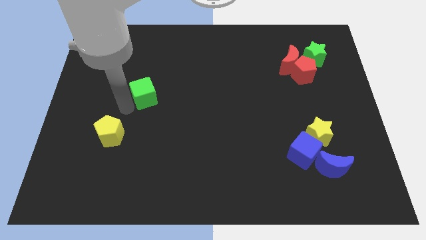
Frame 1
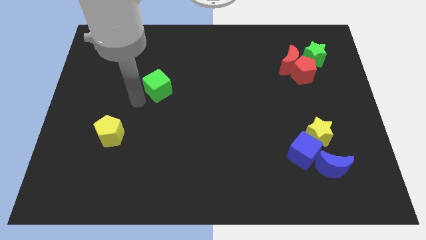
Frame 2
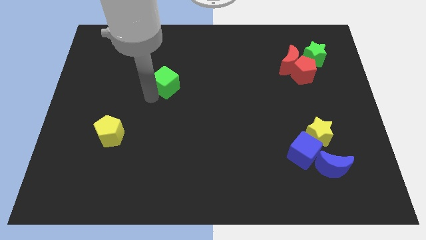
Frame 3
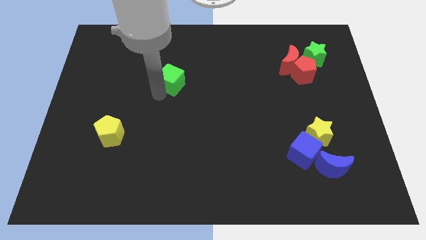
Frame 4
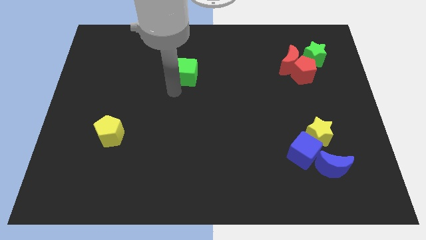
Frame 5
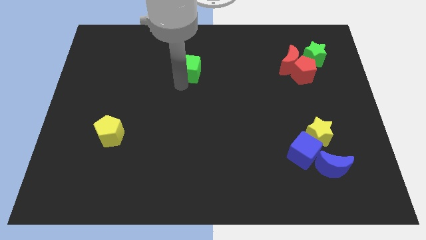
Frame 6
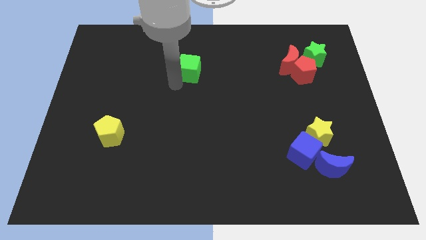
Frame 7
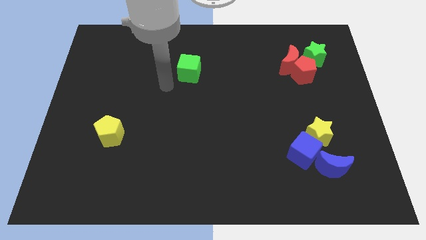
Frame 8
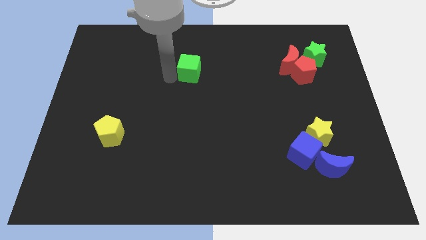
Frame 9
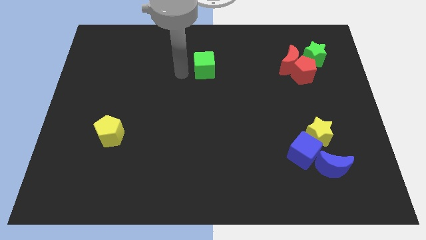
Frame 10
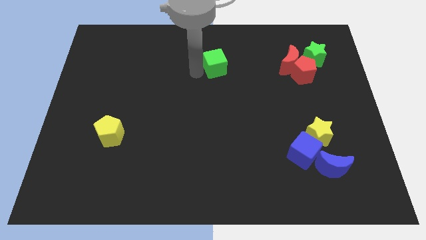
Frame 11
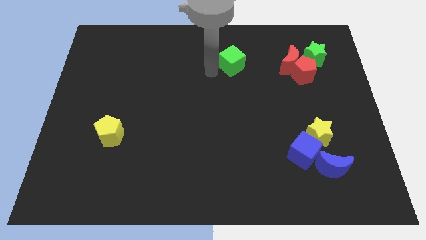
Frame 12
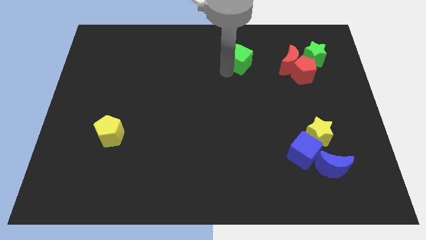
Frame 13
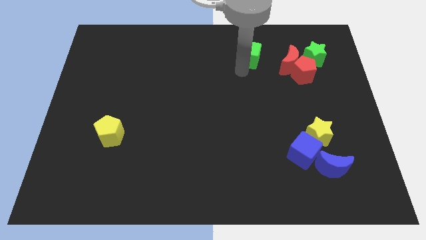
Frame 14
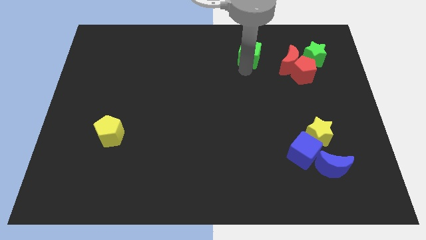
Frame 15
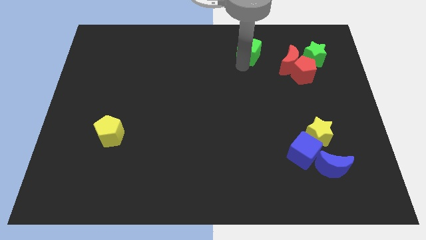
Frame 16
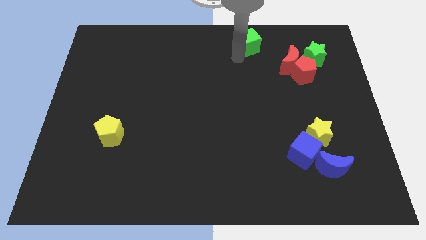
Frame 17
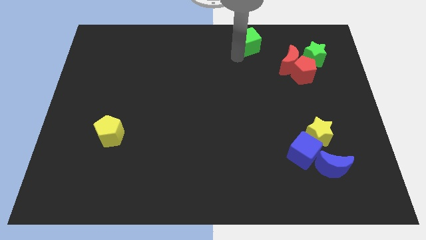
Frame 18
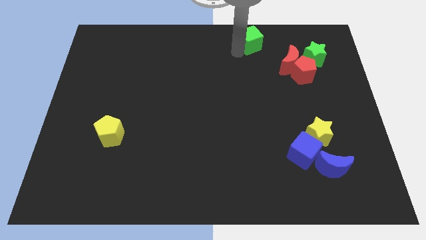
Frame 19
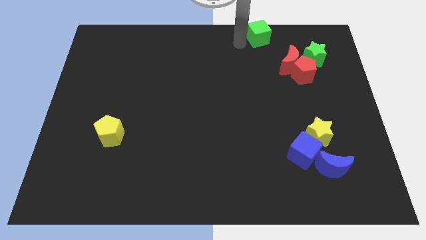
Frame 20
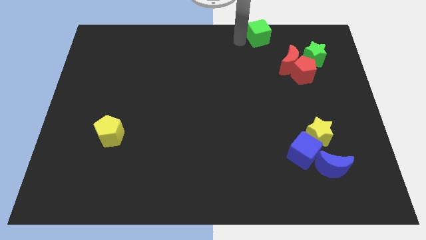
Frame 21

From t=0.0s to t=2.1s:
move the green cube to the top center of the board

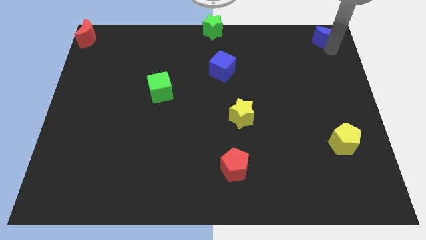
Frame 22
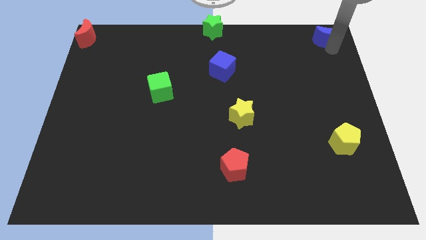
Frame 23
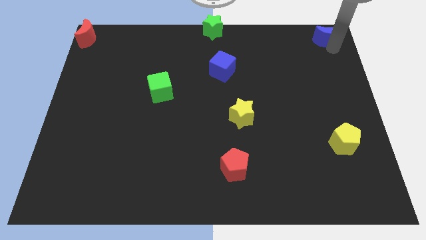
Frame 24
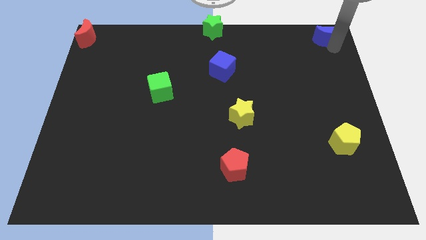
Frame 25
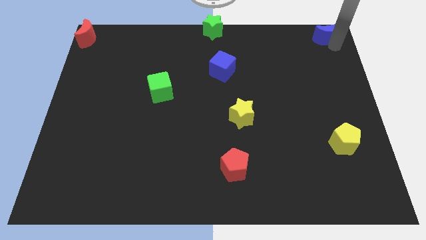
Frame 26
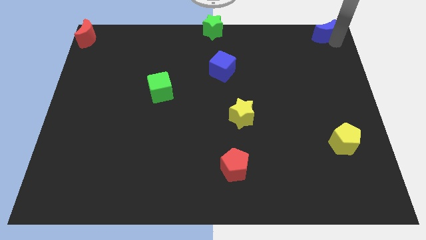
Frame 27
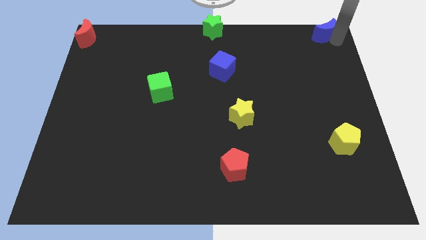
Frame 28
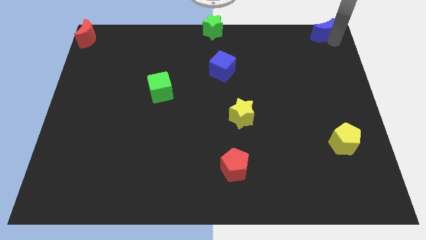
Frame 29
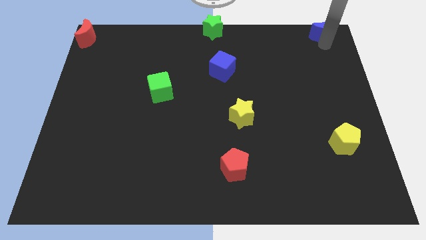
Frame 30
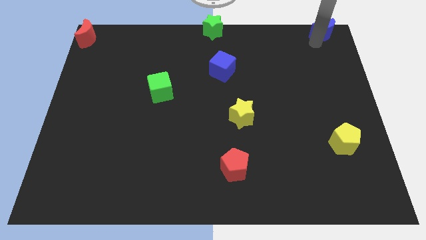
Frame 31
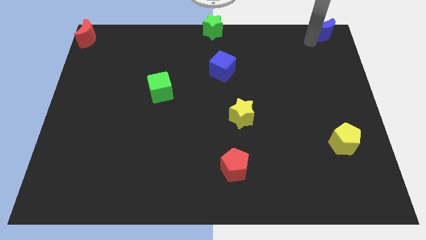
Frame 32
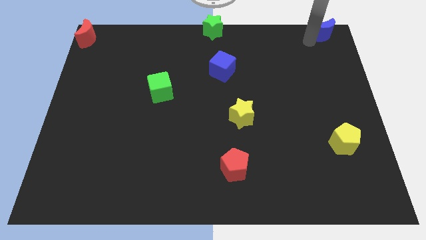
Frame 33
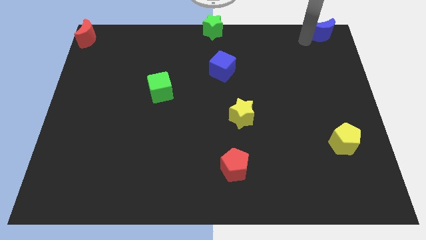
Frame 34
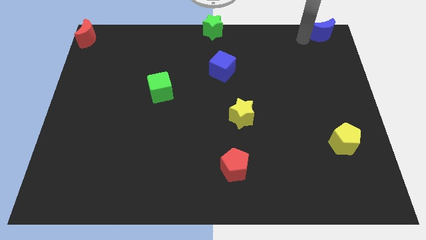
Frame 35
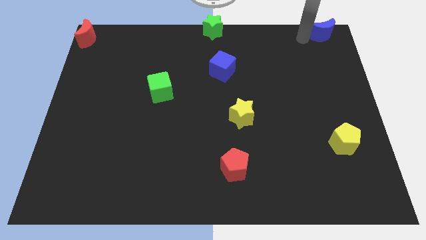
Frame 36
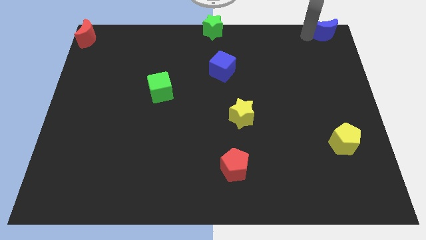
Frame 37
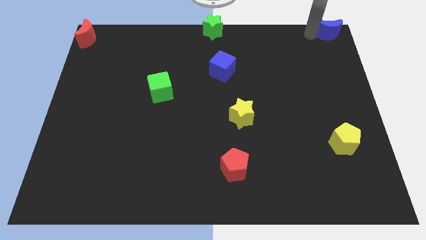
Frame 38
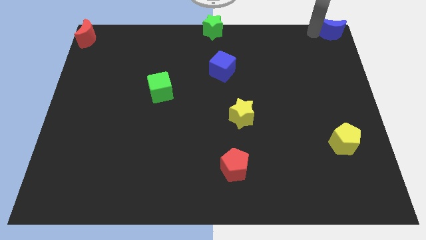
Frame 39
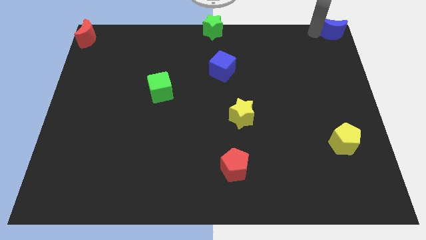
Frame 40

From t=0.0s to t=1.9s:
push the blue crescent to the top right of the board

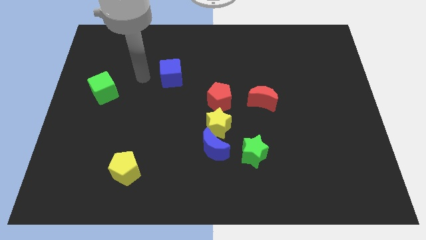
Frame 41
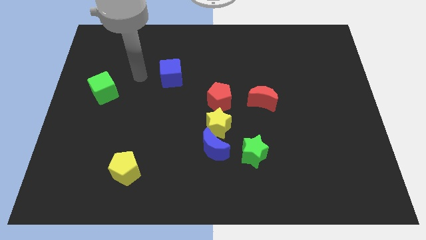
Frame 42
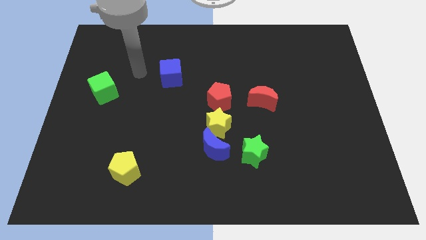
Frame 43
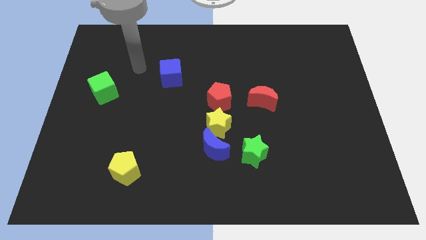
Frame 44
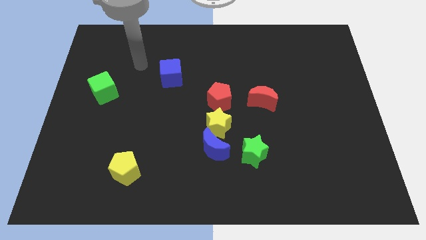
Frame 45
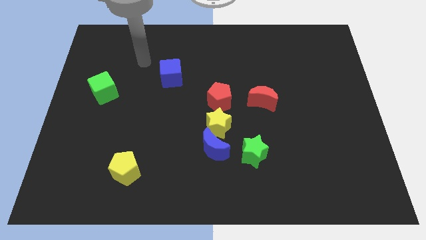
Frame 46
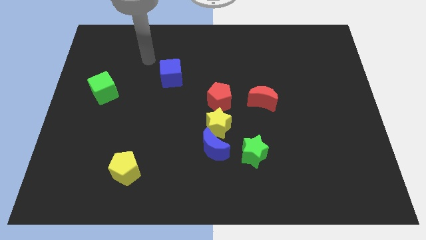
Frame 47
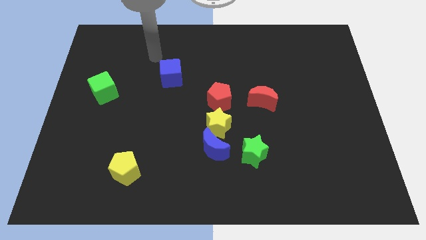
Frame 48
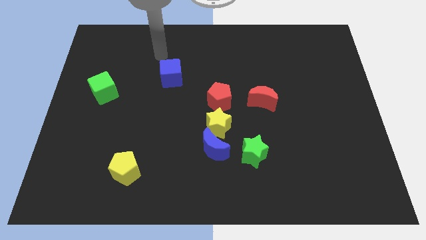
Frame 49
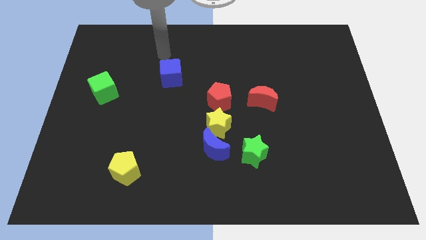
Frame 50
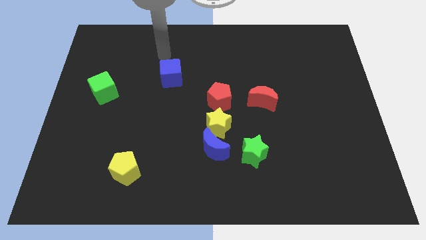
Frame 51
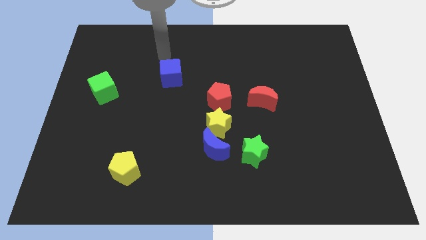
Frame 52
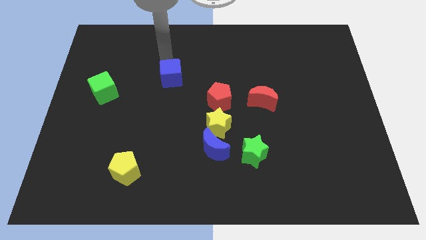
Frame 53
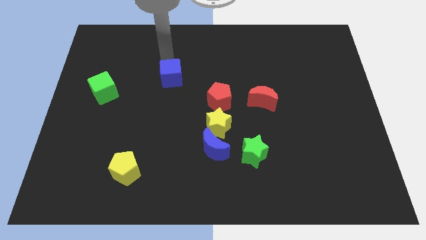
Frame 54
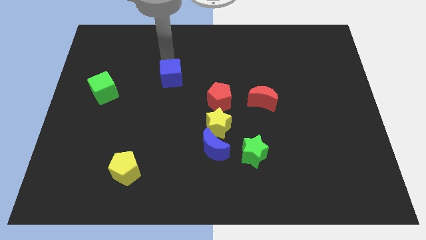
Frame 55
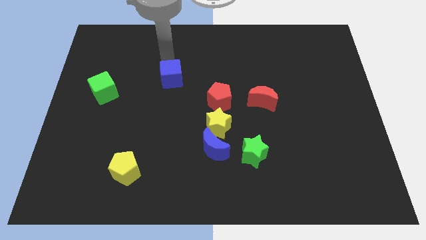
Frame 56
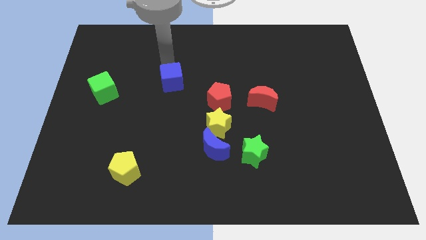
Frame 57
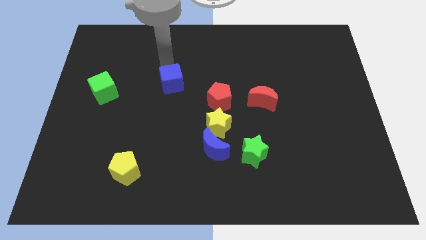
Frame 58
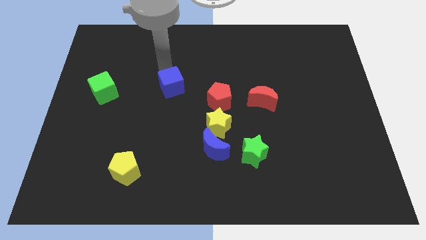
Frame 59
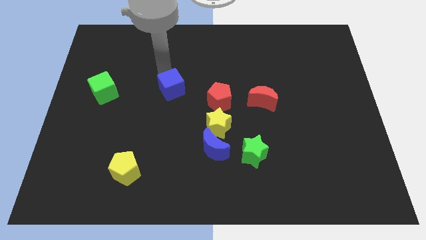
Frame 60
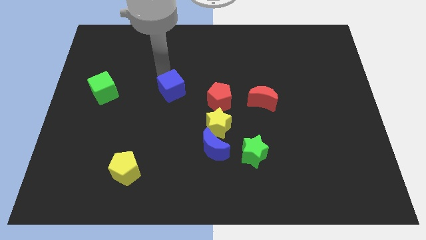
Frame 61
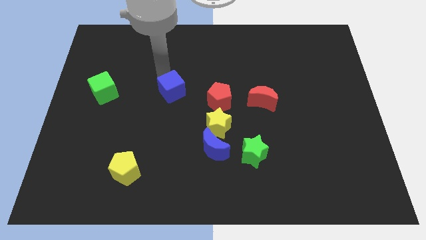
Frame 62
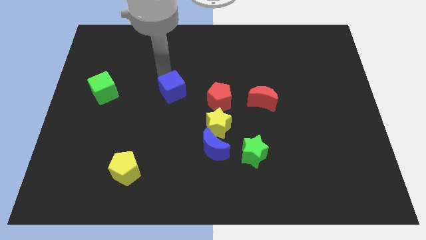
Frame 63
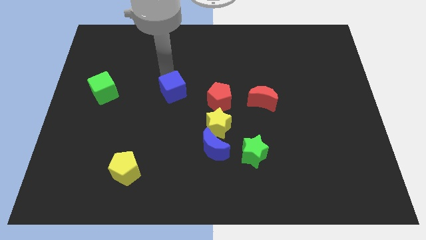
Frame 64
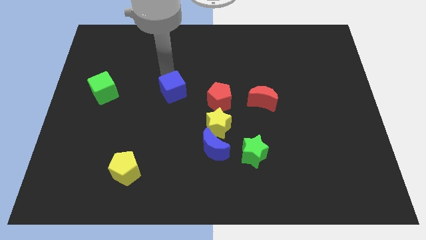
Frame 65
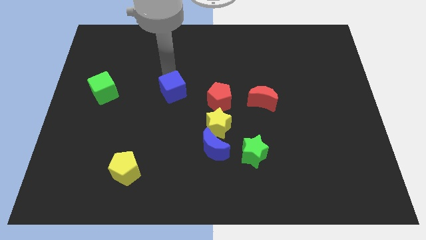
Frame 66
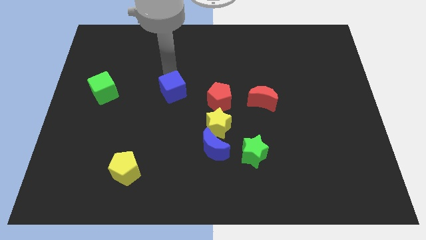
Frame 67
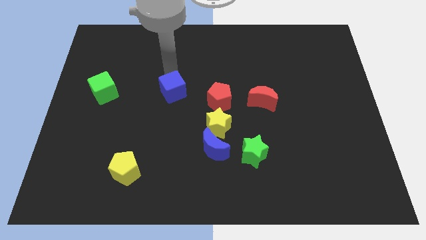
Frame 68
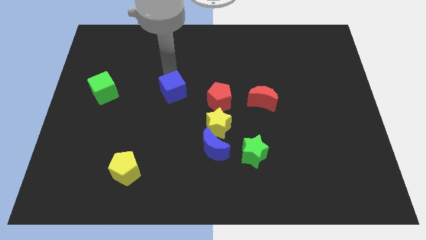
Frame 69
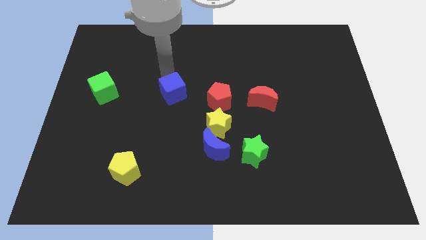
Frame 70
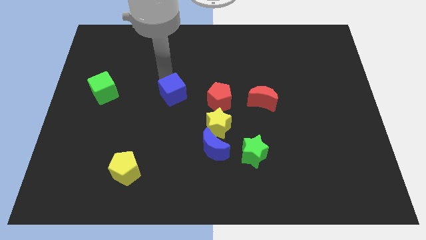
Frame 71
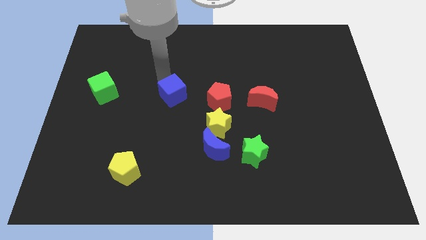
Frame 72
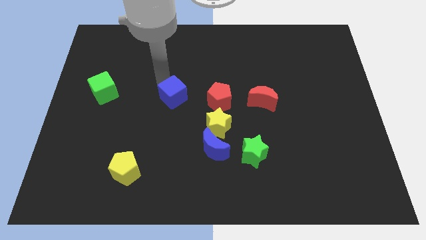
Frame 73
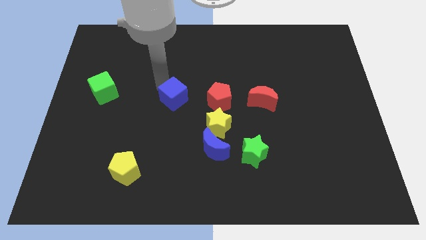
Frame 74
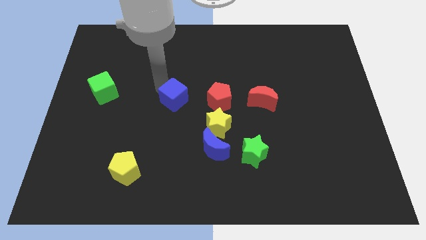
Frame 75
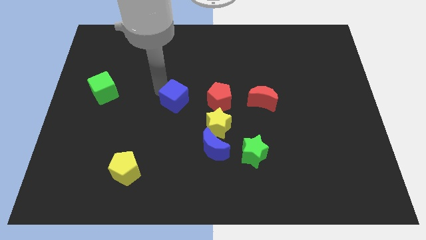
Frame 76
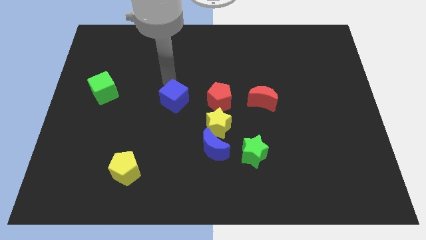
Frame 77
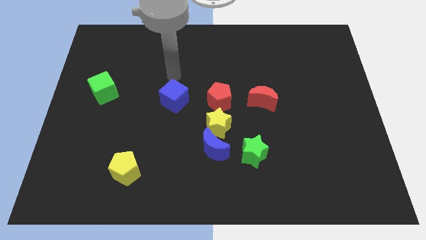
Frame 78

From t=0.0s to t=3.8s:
place the blue cube to the left side of red pentagon

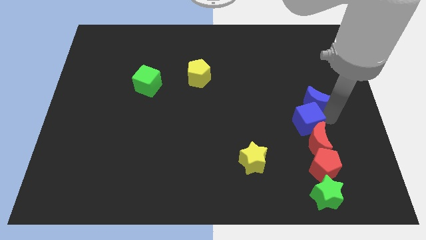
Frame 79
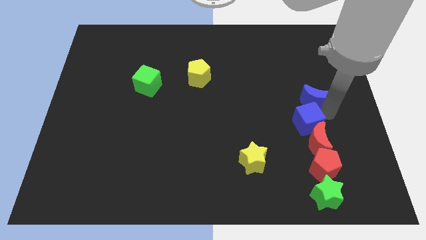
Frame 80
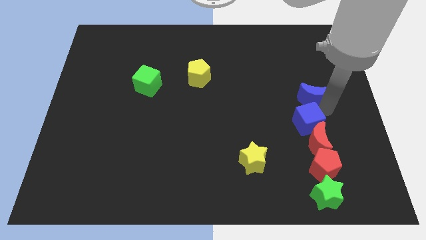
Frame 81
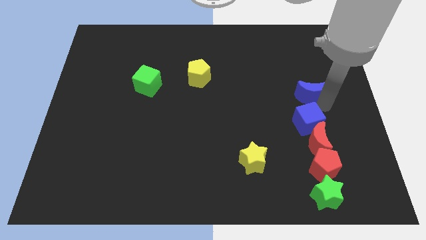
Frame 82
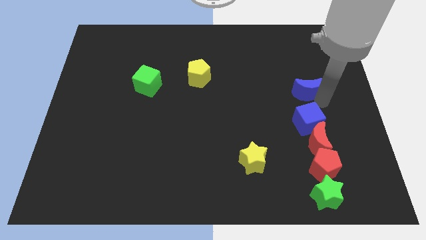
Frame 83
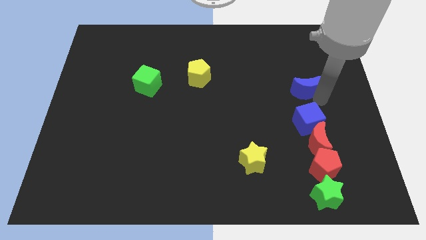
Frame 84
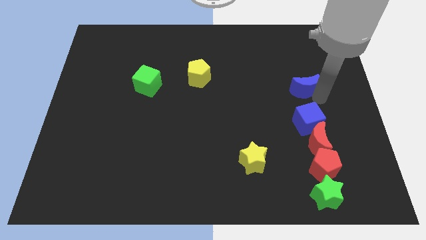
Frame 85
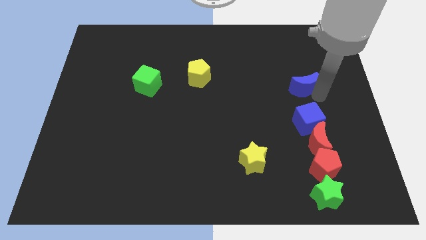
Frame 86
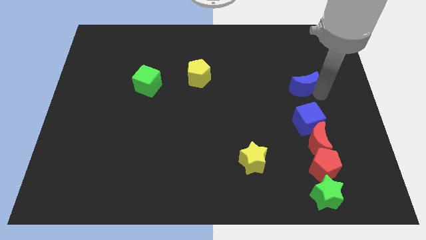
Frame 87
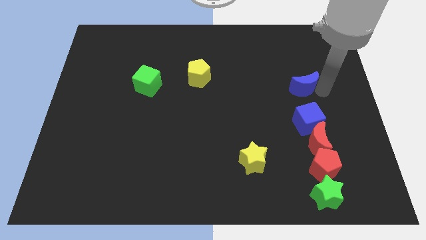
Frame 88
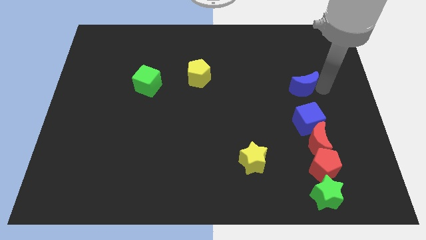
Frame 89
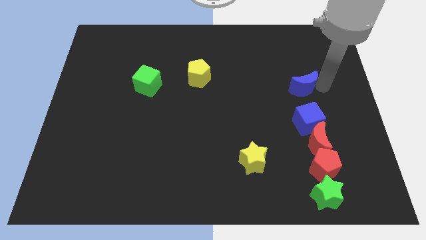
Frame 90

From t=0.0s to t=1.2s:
separate the blue crescent from the blue cube
